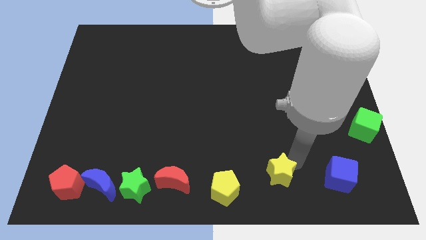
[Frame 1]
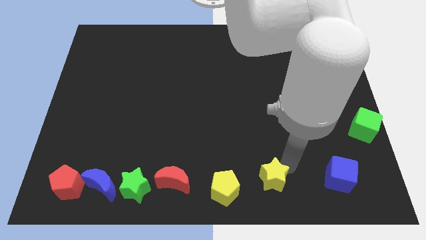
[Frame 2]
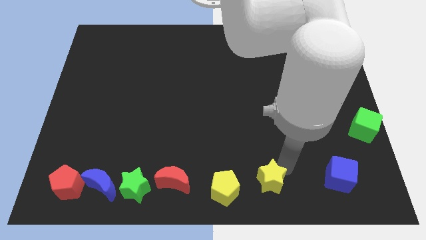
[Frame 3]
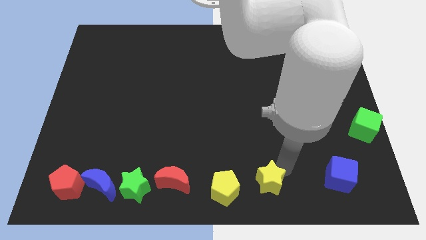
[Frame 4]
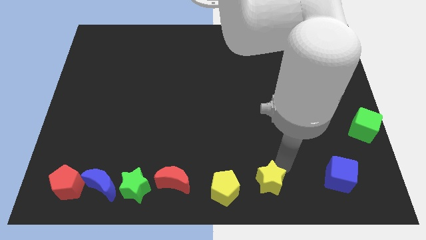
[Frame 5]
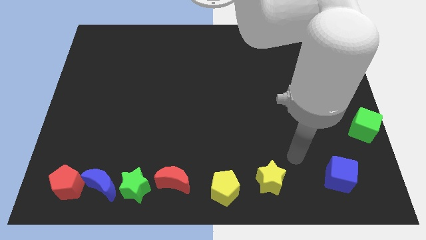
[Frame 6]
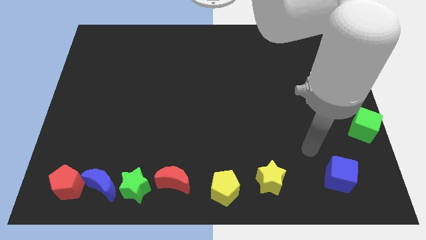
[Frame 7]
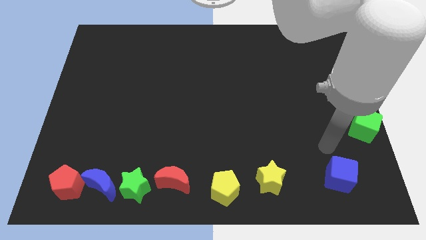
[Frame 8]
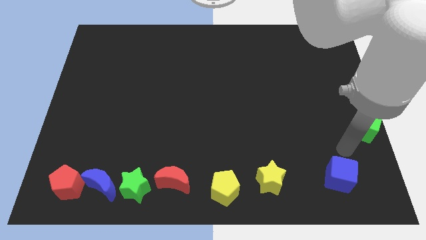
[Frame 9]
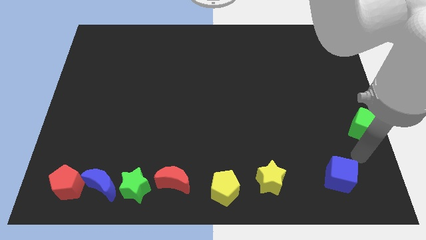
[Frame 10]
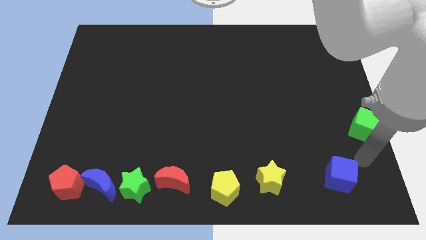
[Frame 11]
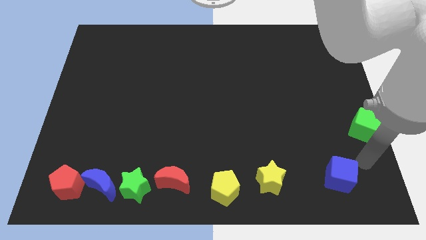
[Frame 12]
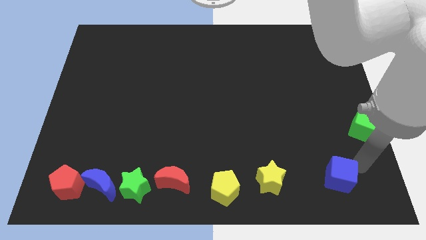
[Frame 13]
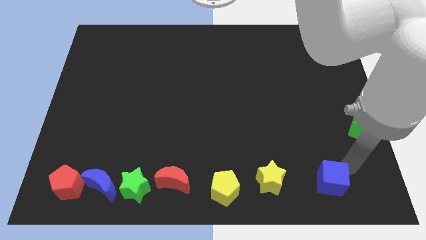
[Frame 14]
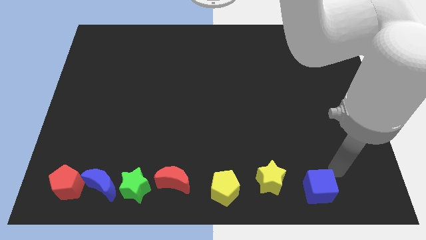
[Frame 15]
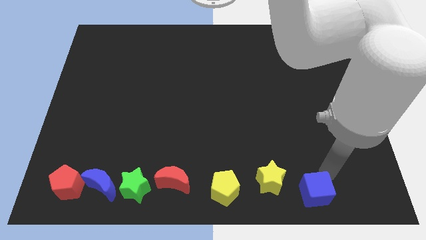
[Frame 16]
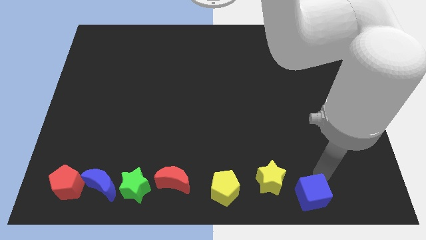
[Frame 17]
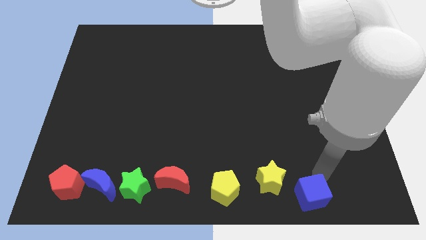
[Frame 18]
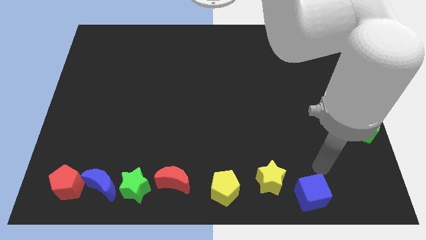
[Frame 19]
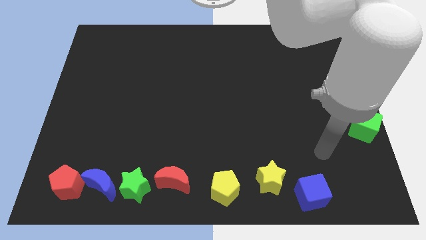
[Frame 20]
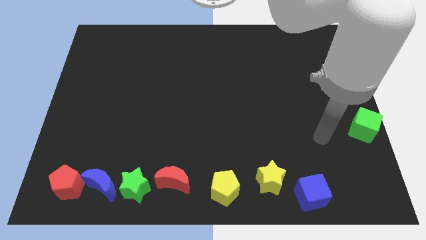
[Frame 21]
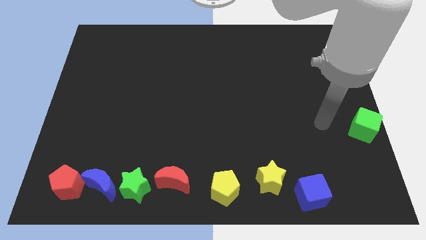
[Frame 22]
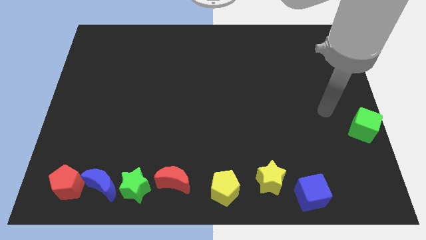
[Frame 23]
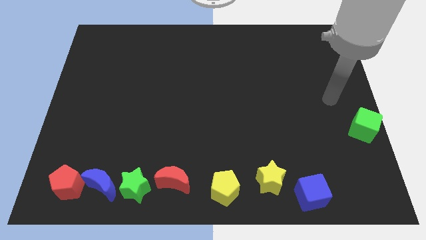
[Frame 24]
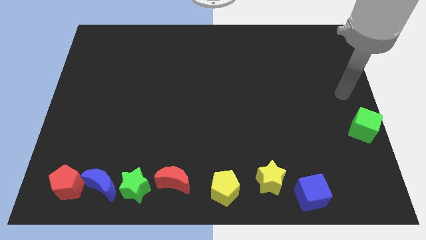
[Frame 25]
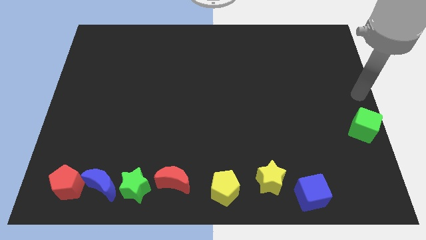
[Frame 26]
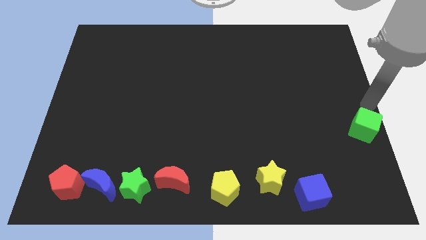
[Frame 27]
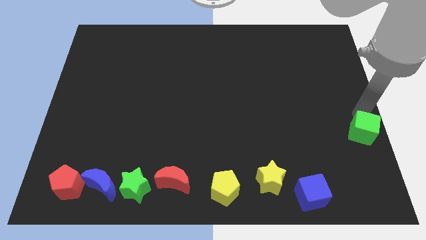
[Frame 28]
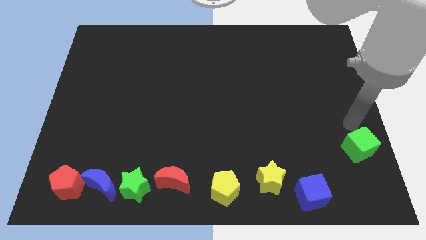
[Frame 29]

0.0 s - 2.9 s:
move the blue cube to the right of the yellow star

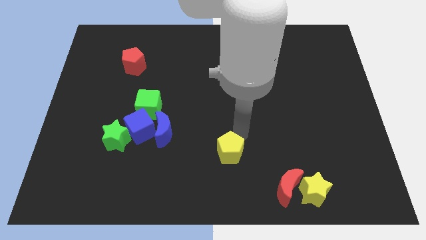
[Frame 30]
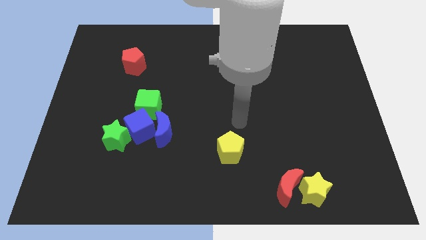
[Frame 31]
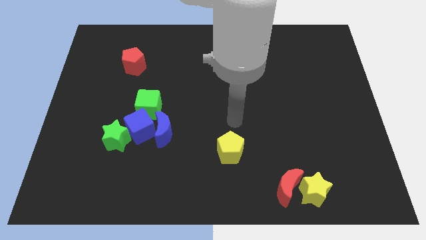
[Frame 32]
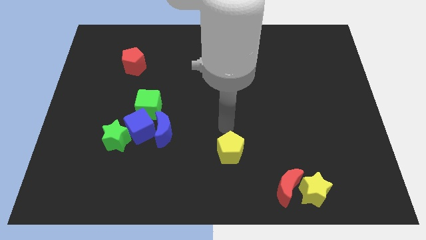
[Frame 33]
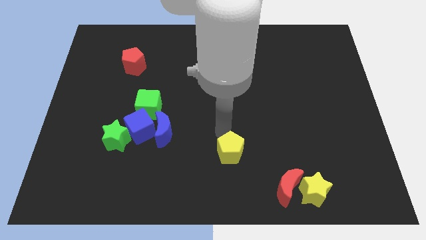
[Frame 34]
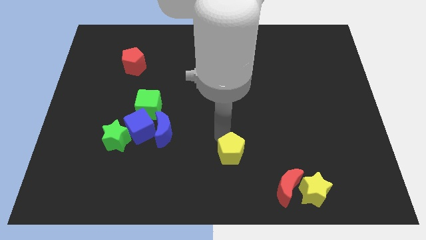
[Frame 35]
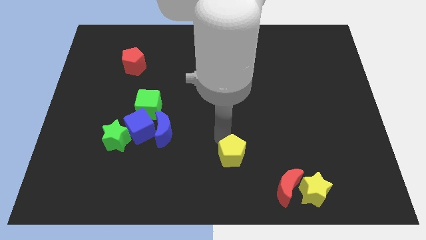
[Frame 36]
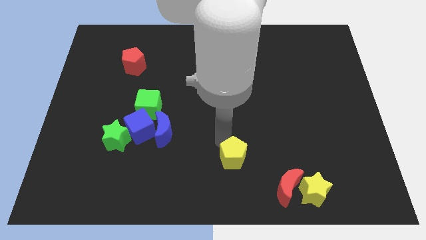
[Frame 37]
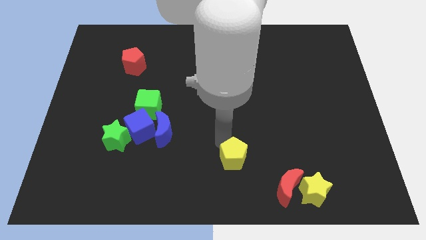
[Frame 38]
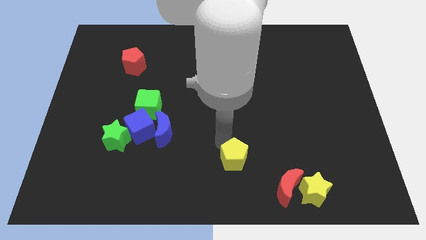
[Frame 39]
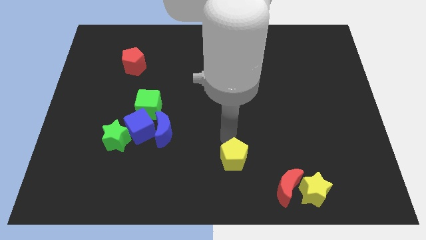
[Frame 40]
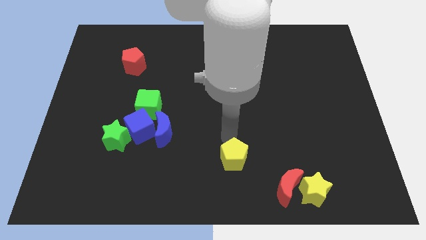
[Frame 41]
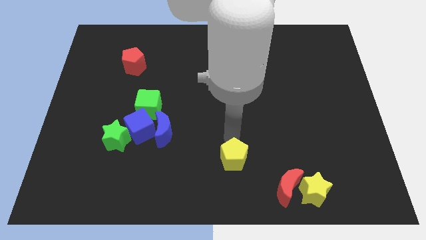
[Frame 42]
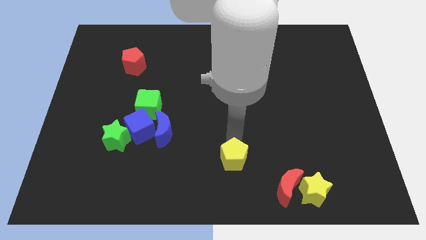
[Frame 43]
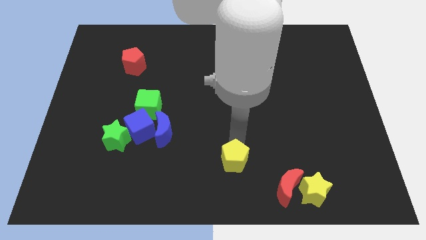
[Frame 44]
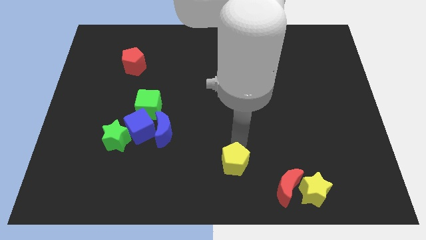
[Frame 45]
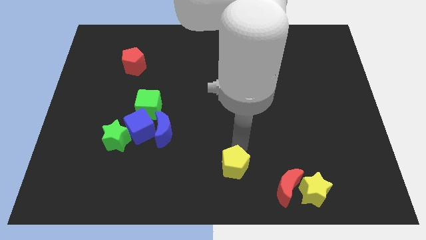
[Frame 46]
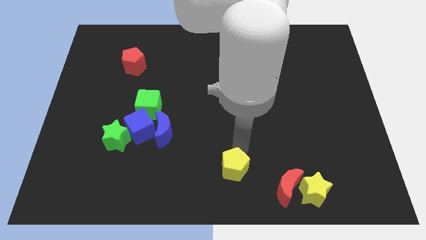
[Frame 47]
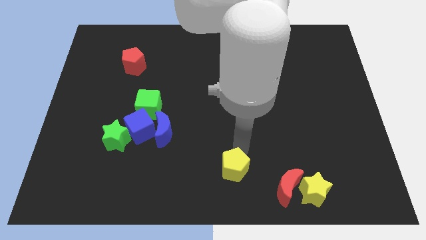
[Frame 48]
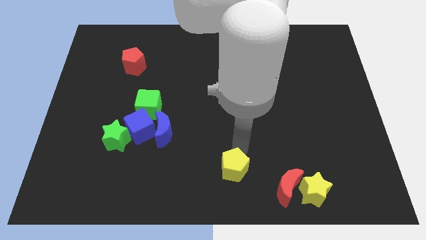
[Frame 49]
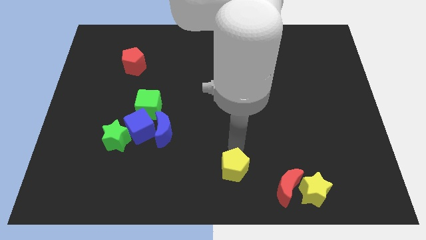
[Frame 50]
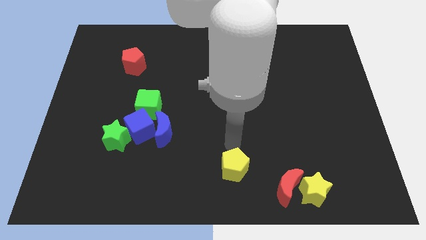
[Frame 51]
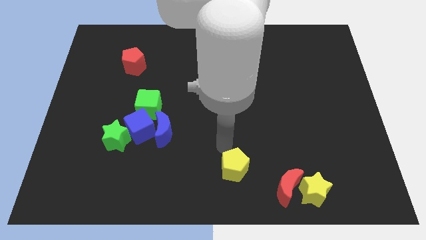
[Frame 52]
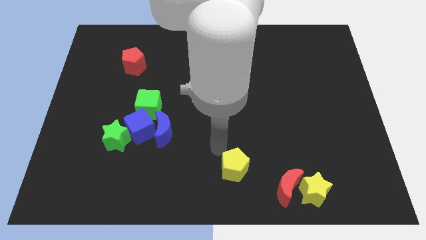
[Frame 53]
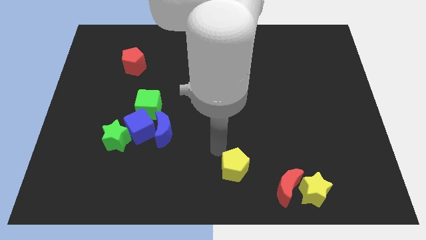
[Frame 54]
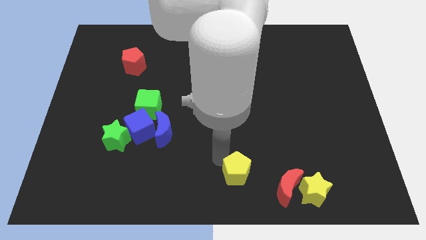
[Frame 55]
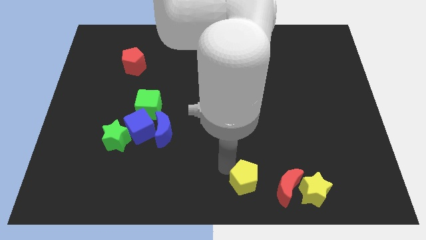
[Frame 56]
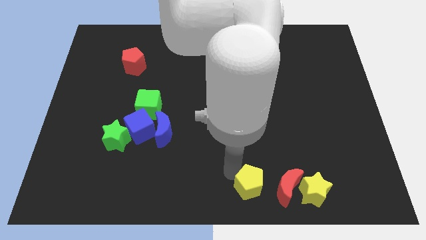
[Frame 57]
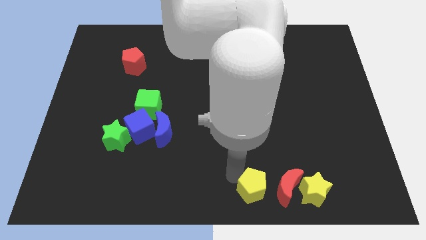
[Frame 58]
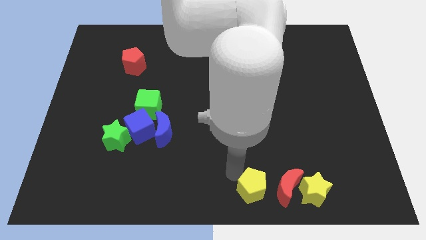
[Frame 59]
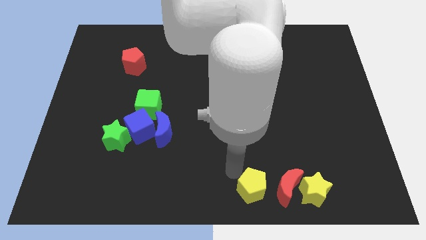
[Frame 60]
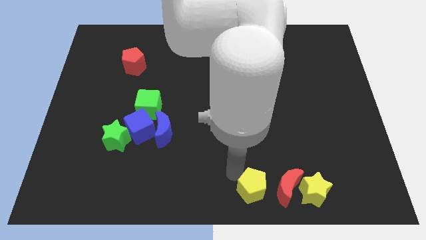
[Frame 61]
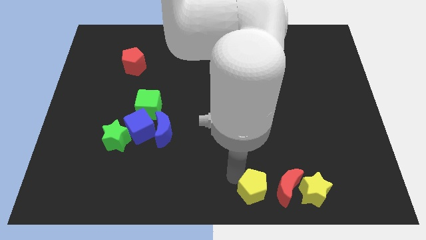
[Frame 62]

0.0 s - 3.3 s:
place yellow pentagon to the left of red moon

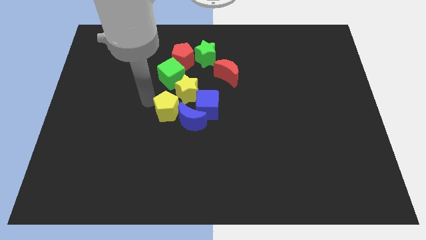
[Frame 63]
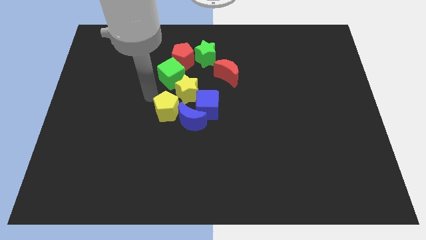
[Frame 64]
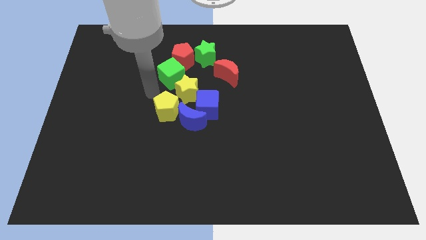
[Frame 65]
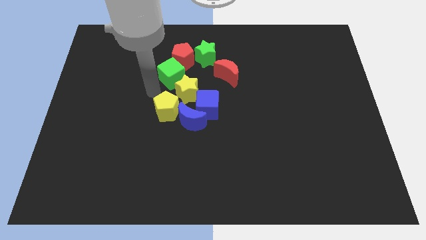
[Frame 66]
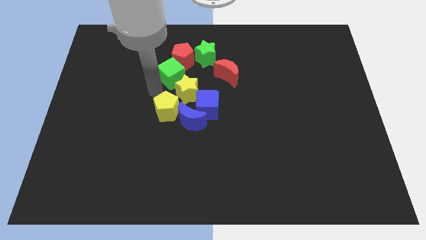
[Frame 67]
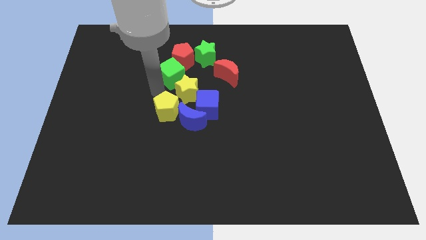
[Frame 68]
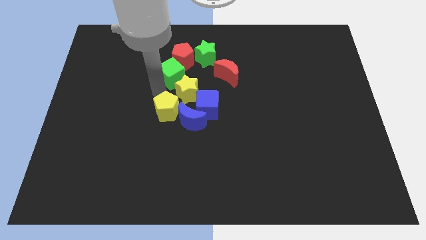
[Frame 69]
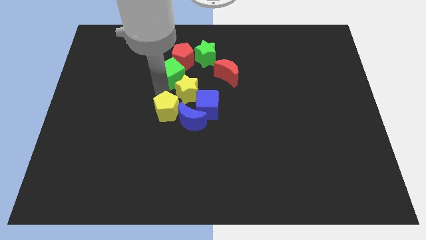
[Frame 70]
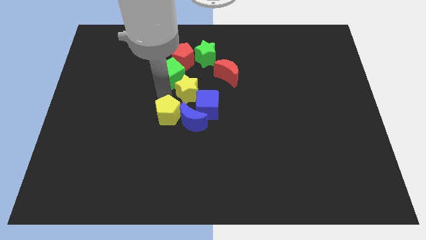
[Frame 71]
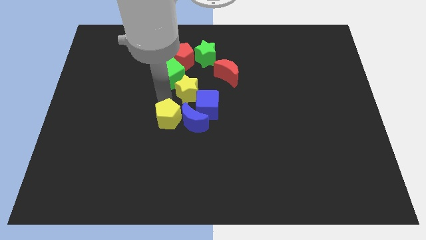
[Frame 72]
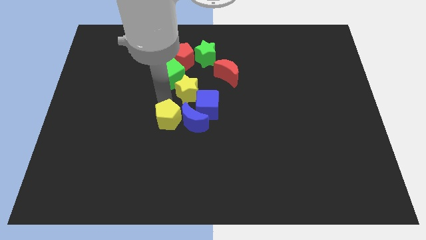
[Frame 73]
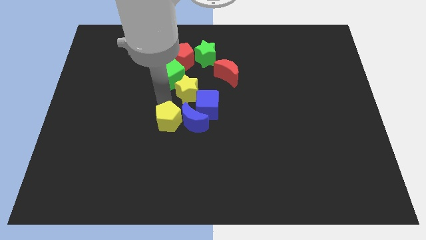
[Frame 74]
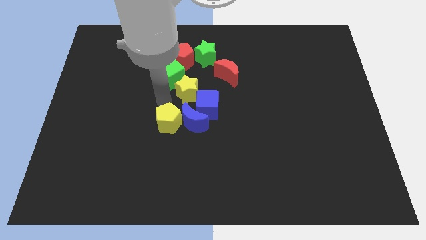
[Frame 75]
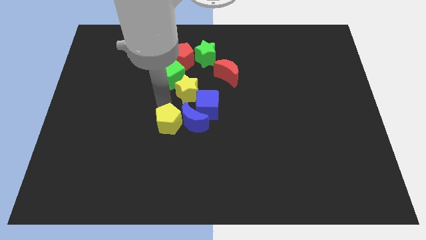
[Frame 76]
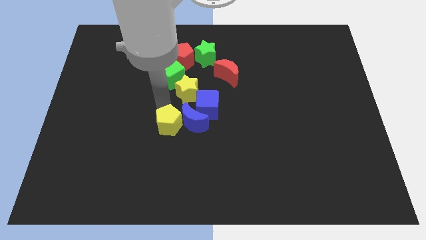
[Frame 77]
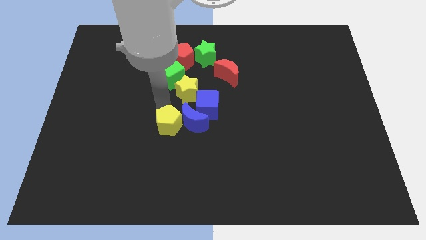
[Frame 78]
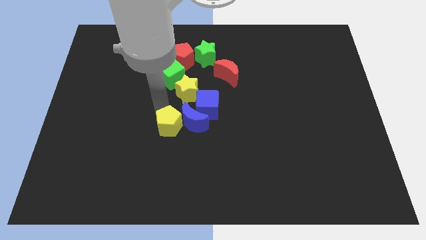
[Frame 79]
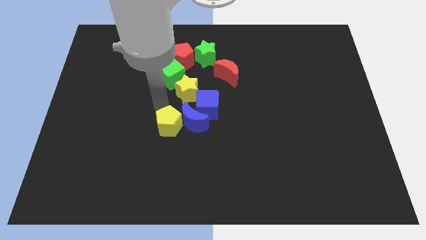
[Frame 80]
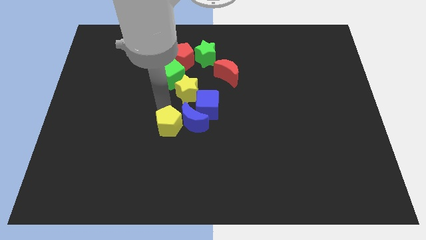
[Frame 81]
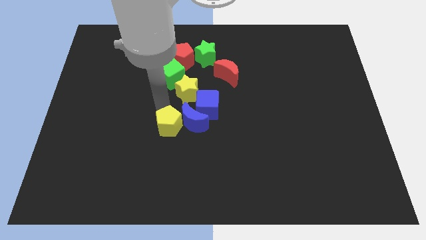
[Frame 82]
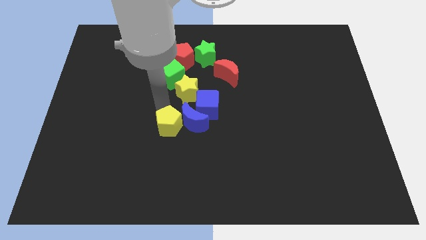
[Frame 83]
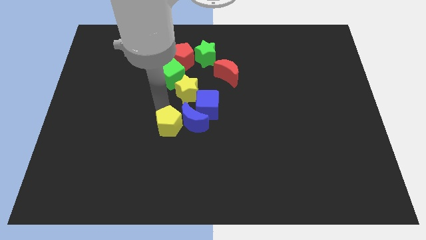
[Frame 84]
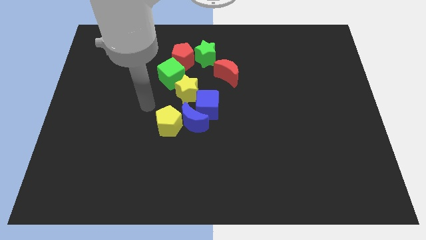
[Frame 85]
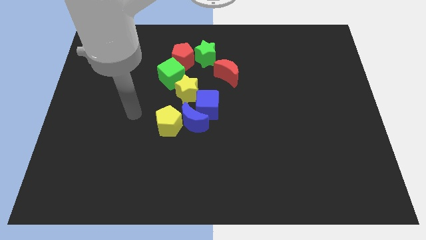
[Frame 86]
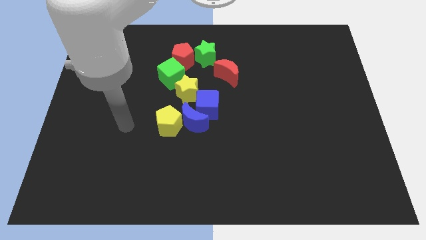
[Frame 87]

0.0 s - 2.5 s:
separate the yellow pentagon from the yellow star

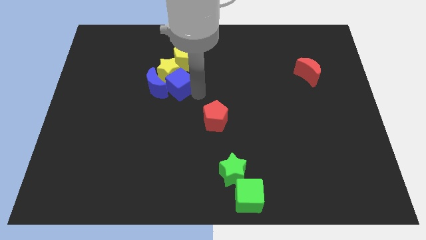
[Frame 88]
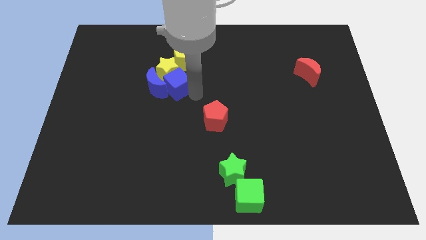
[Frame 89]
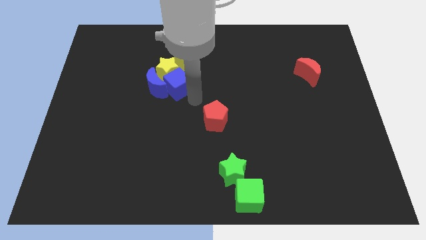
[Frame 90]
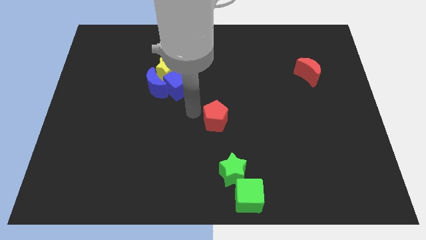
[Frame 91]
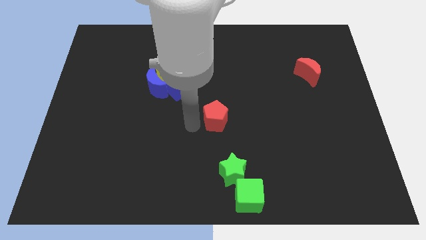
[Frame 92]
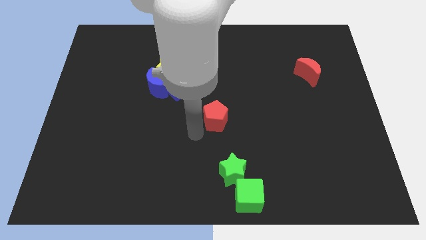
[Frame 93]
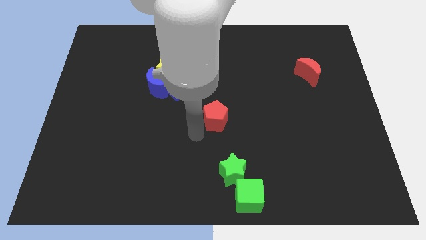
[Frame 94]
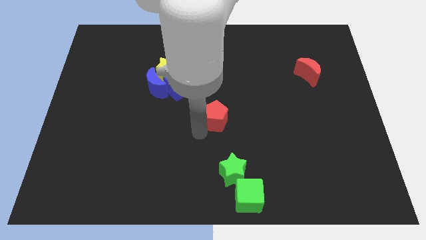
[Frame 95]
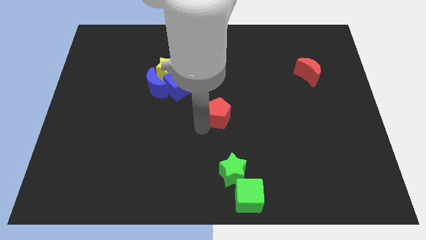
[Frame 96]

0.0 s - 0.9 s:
move the red pentagon slightly to the center of the board
